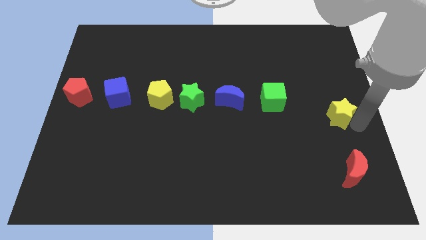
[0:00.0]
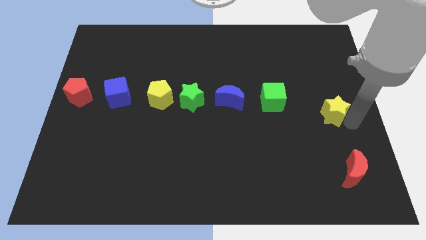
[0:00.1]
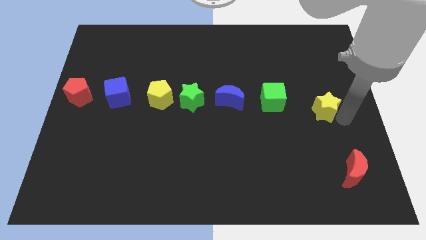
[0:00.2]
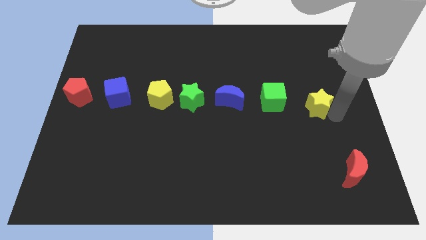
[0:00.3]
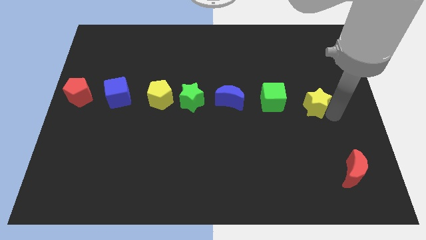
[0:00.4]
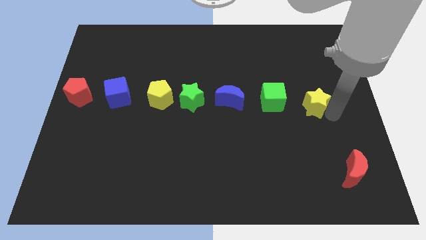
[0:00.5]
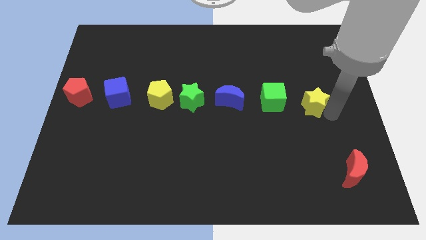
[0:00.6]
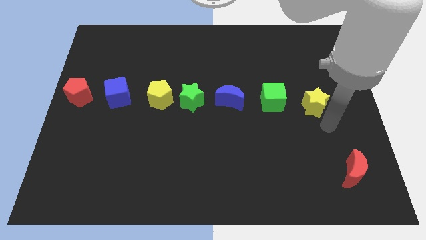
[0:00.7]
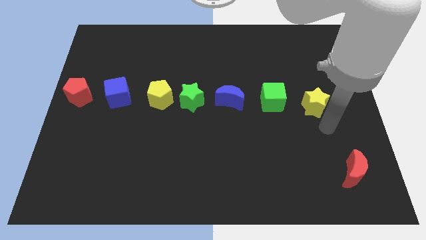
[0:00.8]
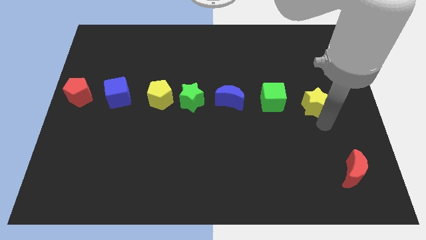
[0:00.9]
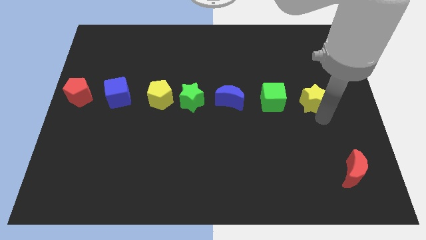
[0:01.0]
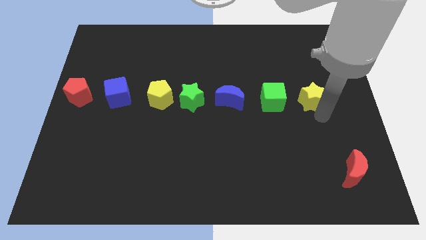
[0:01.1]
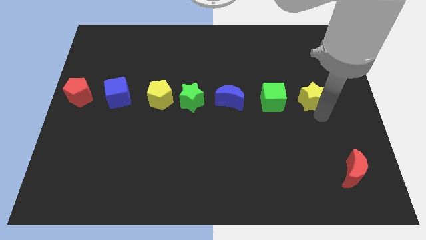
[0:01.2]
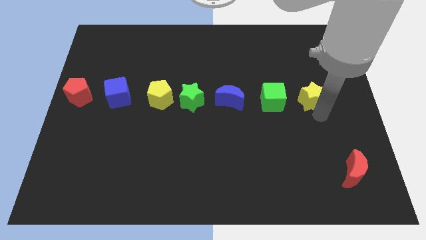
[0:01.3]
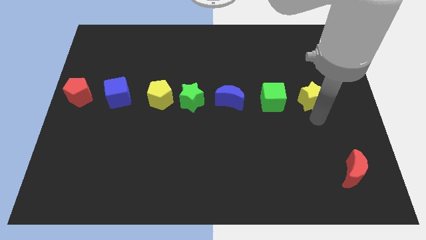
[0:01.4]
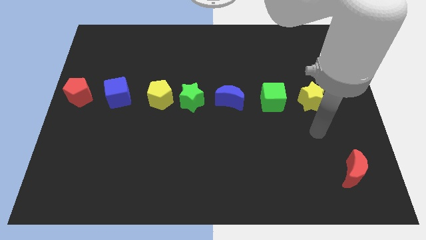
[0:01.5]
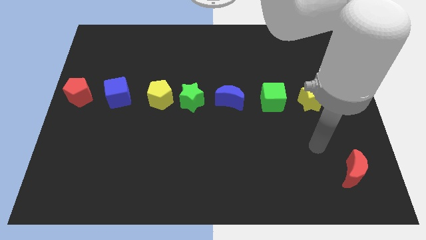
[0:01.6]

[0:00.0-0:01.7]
slide the yellow star to the right of the green cube

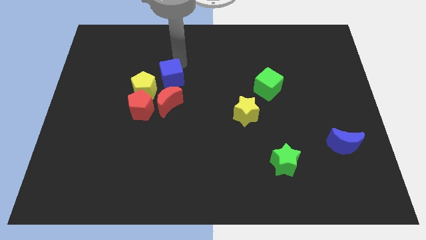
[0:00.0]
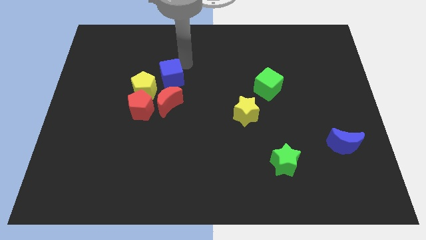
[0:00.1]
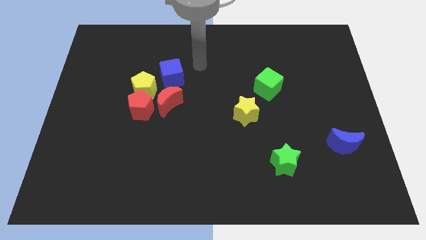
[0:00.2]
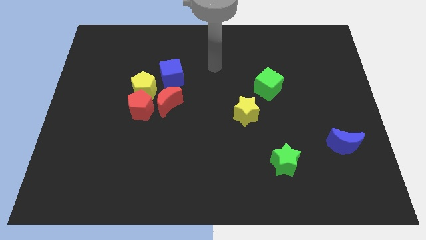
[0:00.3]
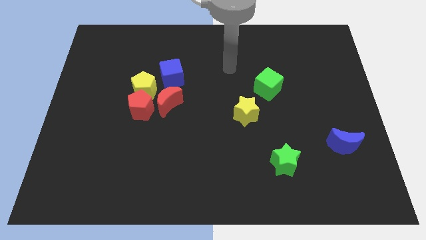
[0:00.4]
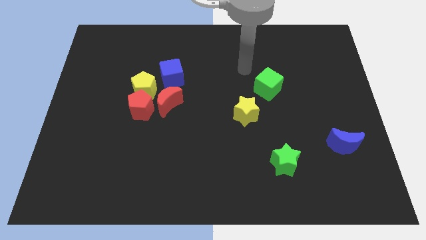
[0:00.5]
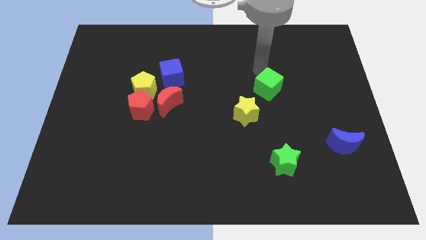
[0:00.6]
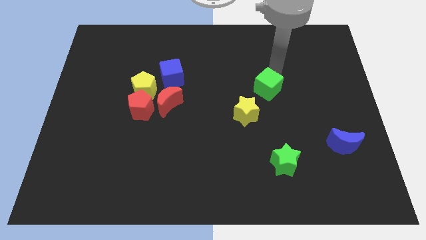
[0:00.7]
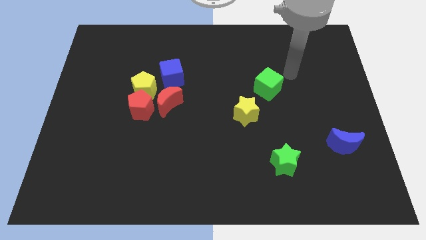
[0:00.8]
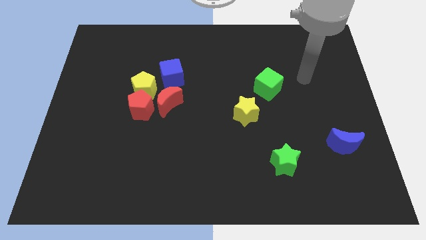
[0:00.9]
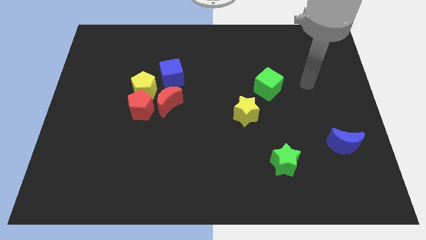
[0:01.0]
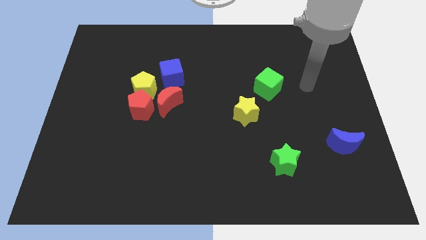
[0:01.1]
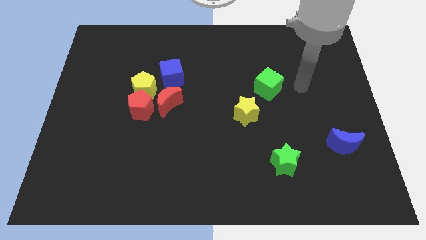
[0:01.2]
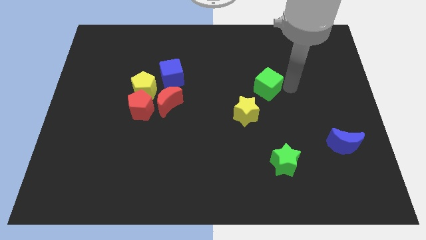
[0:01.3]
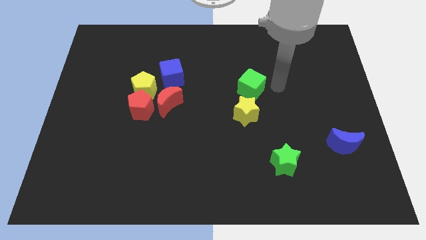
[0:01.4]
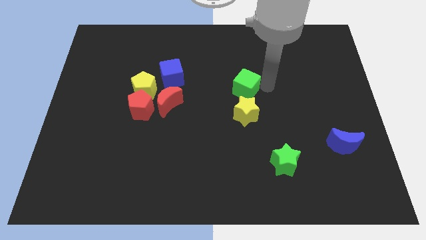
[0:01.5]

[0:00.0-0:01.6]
put the green cube above the yellow star

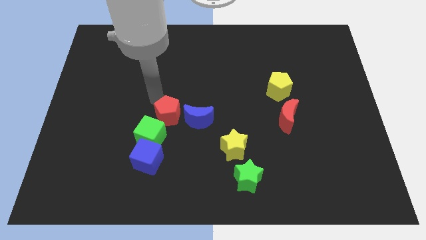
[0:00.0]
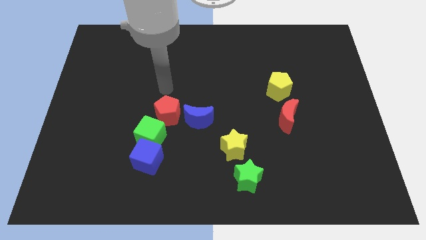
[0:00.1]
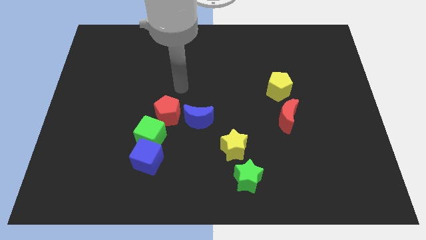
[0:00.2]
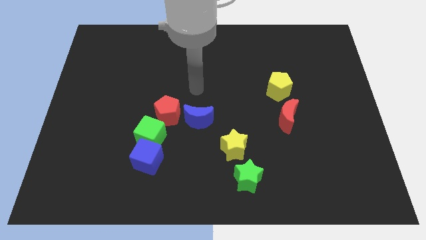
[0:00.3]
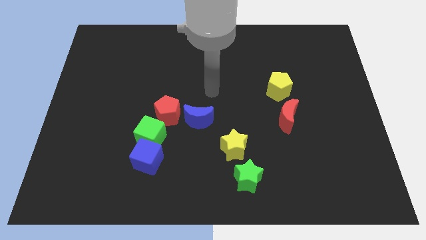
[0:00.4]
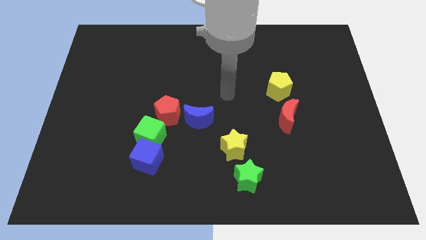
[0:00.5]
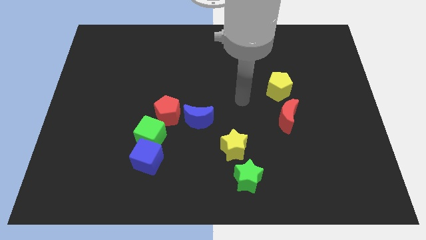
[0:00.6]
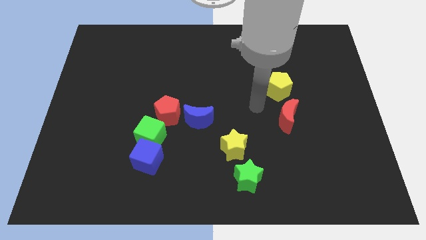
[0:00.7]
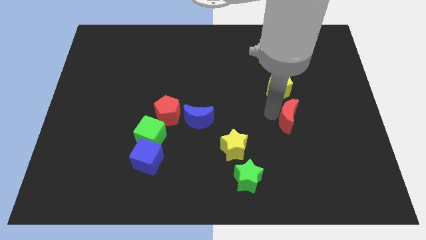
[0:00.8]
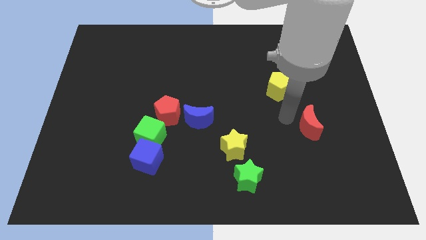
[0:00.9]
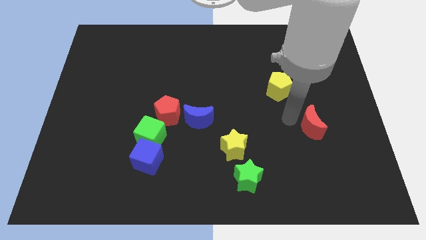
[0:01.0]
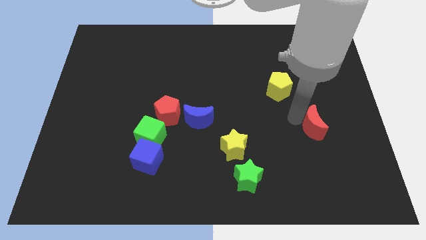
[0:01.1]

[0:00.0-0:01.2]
push the red crescent slightly to the right

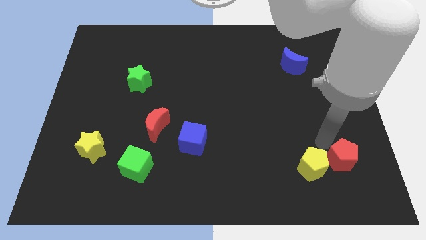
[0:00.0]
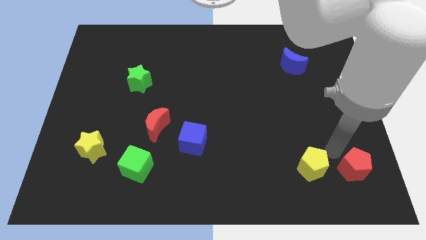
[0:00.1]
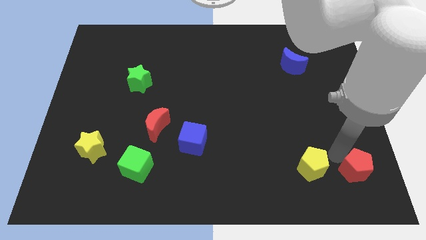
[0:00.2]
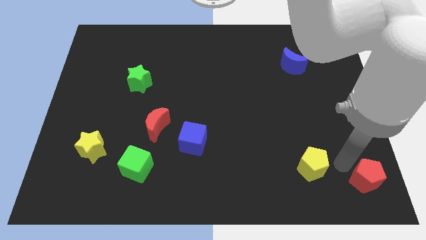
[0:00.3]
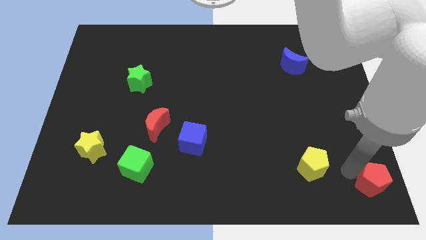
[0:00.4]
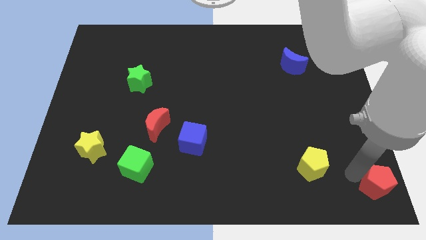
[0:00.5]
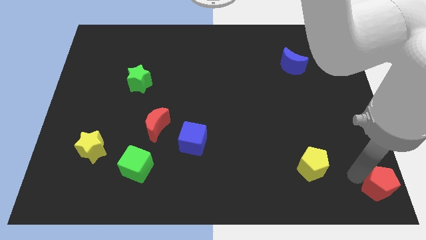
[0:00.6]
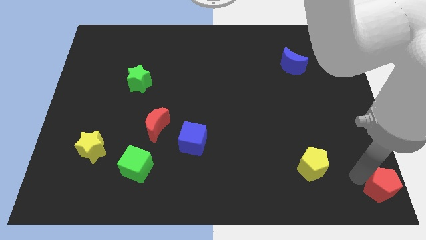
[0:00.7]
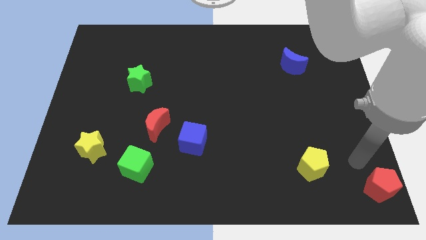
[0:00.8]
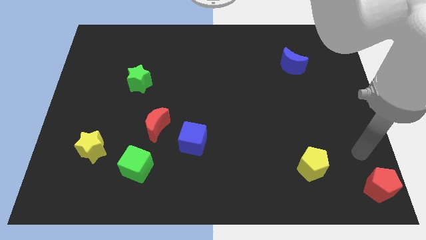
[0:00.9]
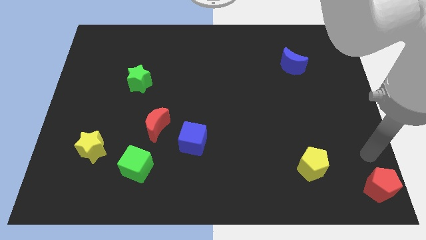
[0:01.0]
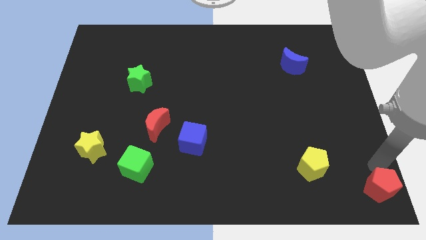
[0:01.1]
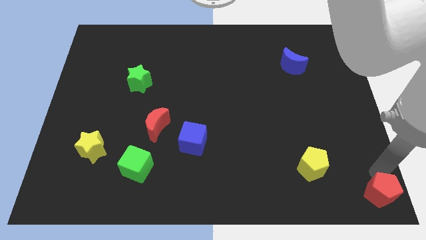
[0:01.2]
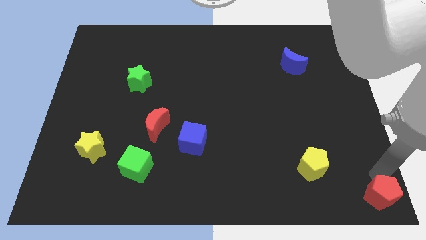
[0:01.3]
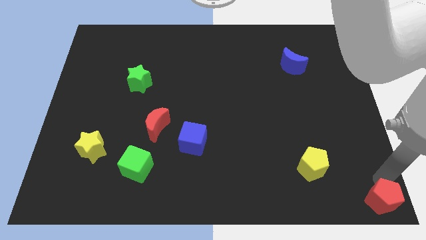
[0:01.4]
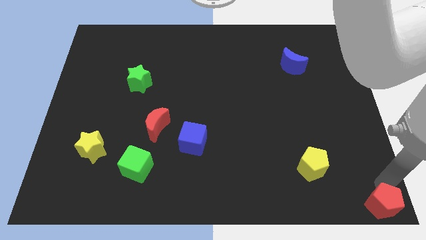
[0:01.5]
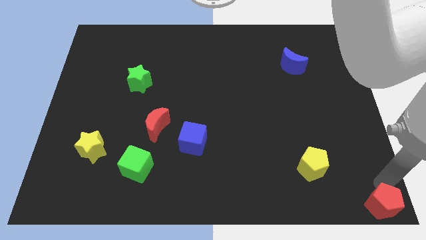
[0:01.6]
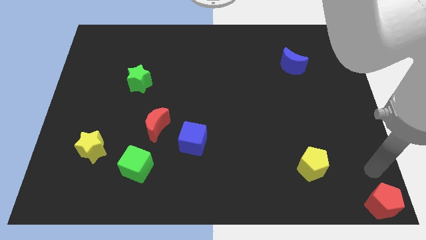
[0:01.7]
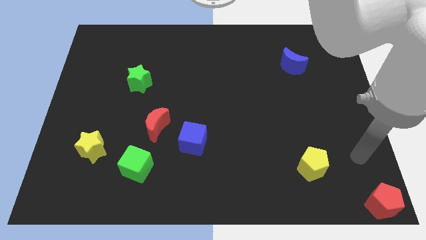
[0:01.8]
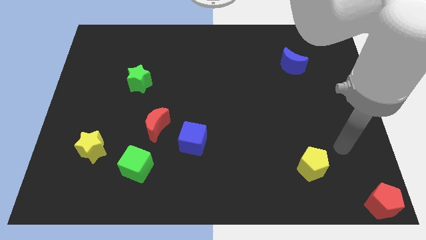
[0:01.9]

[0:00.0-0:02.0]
separate red pentagon from yellow pentagon

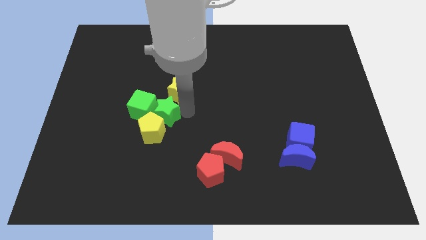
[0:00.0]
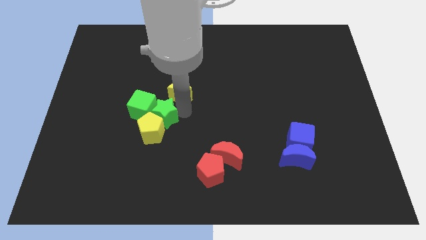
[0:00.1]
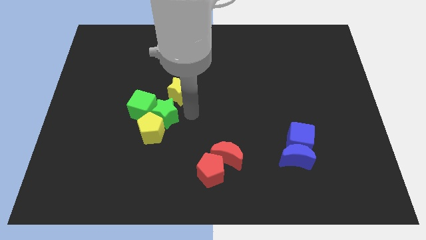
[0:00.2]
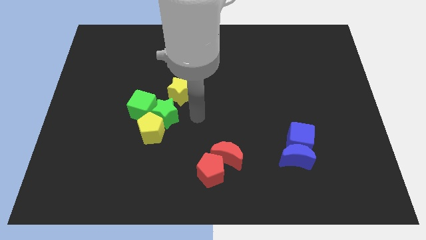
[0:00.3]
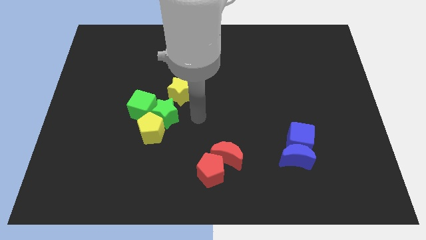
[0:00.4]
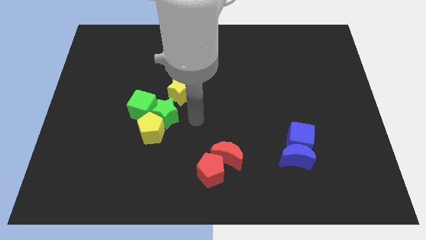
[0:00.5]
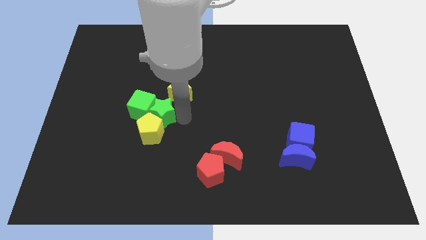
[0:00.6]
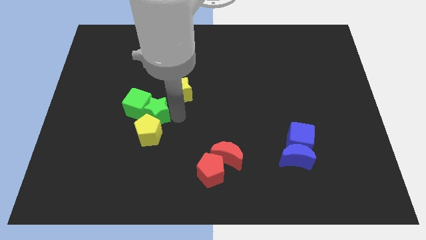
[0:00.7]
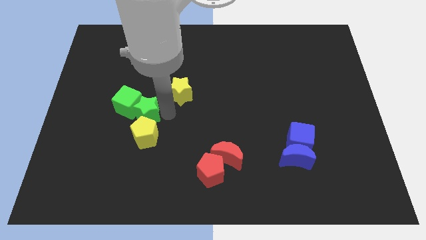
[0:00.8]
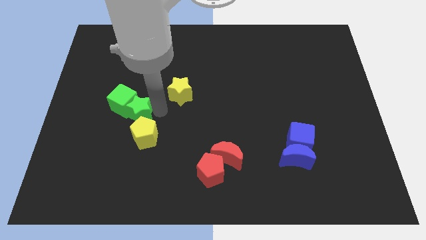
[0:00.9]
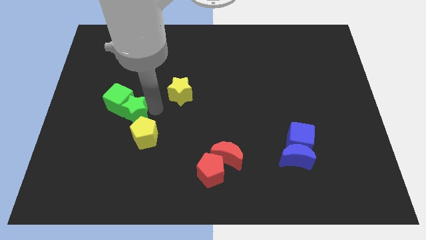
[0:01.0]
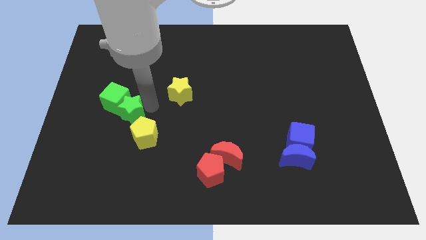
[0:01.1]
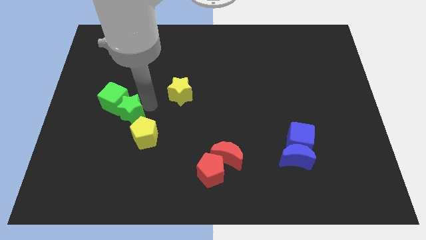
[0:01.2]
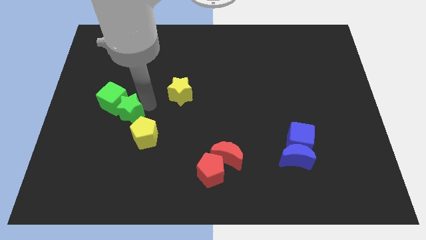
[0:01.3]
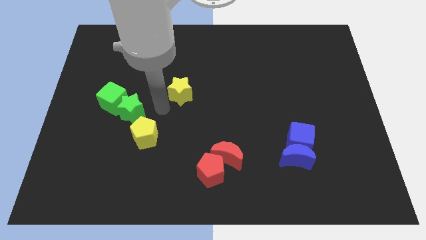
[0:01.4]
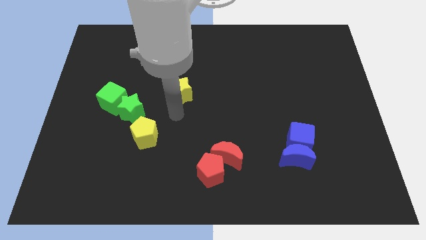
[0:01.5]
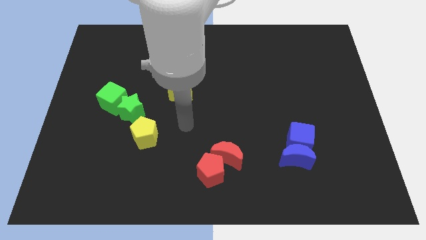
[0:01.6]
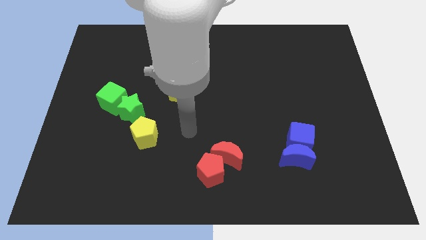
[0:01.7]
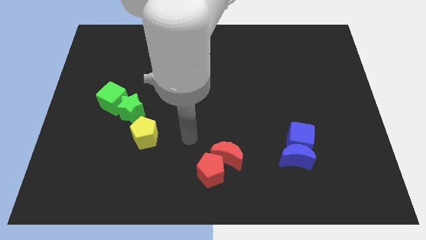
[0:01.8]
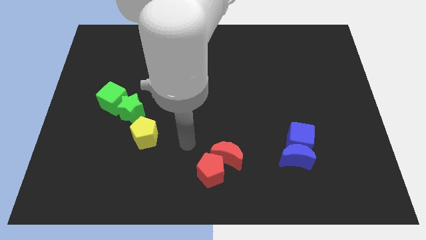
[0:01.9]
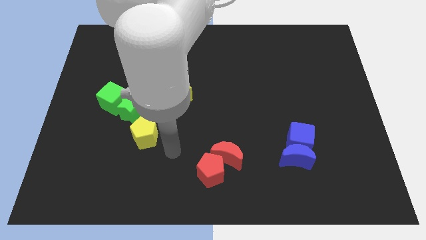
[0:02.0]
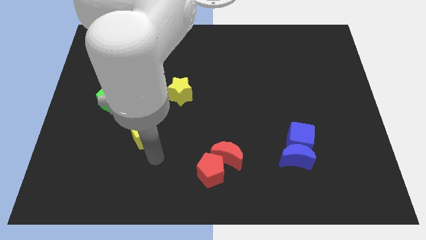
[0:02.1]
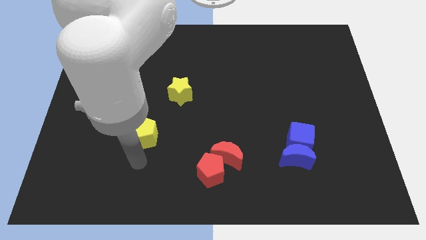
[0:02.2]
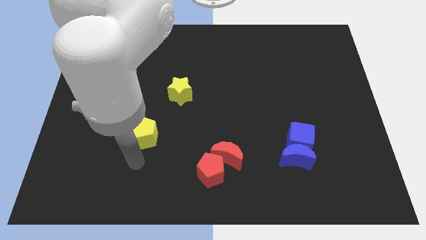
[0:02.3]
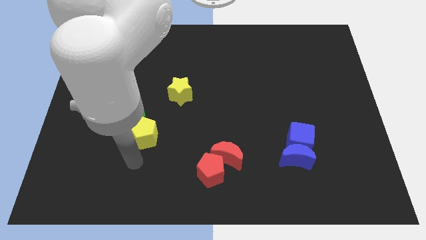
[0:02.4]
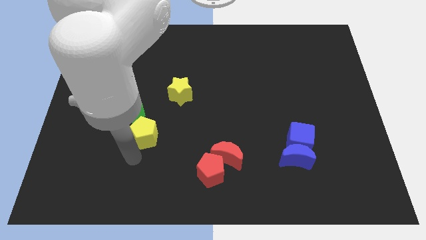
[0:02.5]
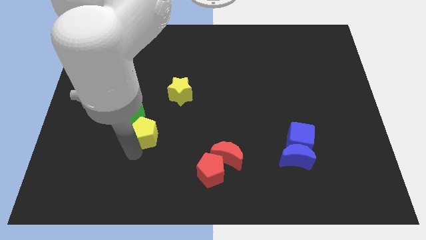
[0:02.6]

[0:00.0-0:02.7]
place the arm down to the yellow pentagon
